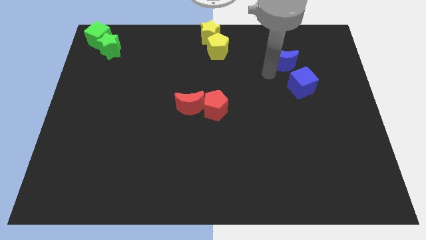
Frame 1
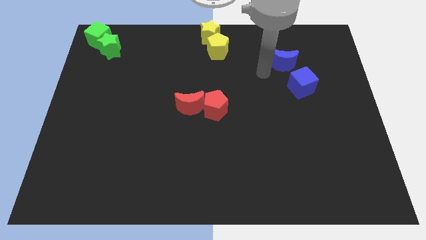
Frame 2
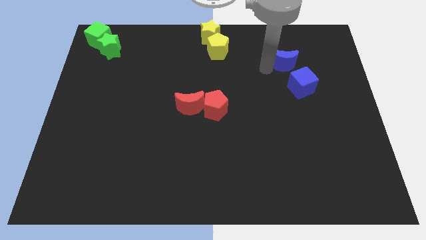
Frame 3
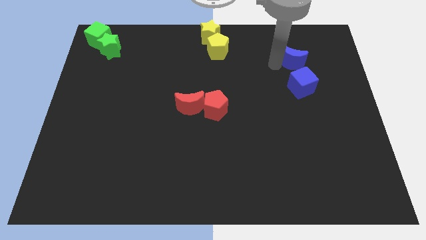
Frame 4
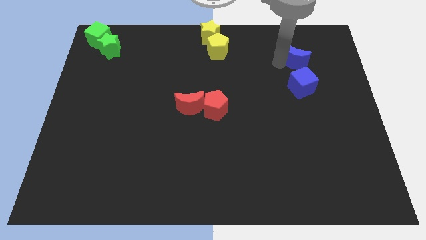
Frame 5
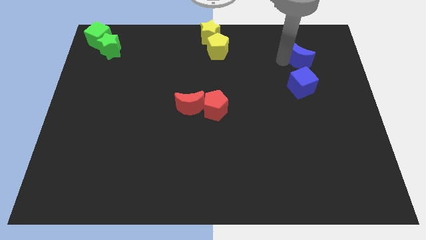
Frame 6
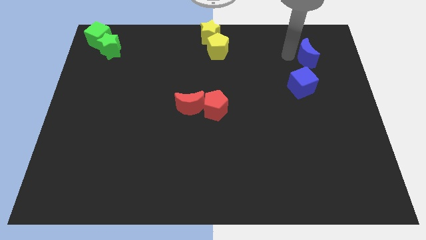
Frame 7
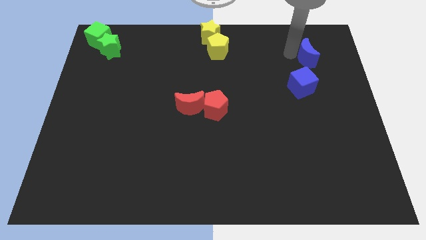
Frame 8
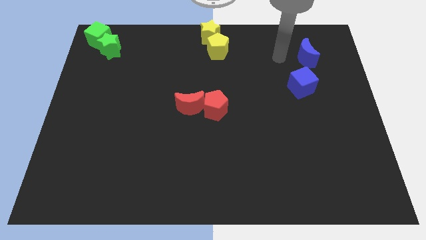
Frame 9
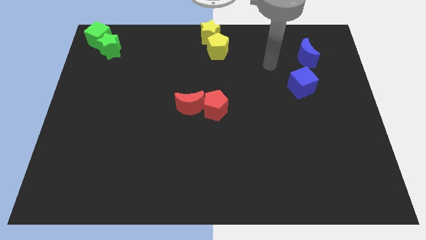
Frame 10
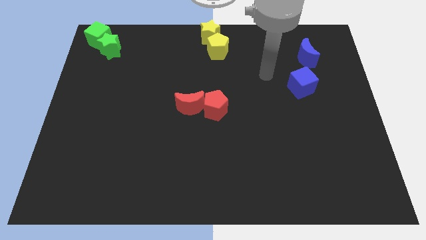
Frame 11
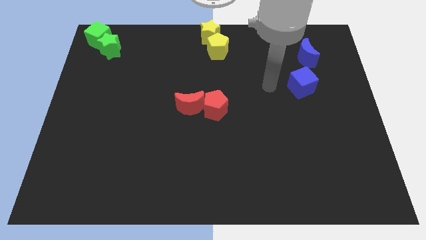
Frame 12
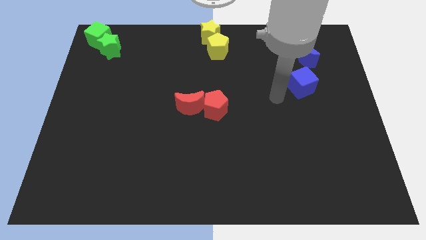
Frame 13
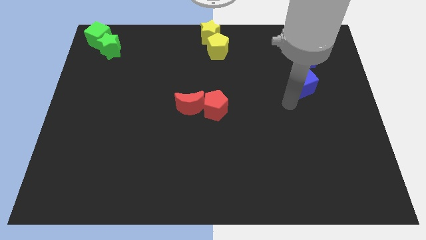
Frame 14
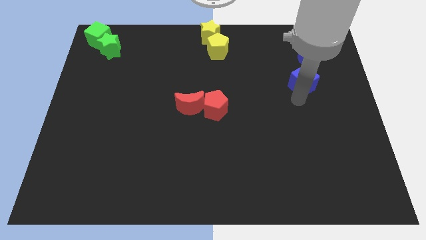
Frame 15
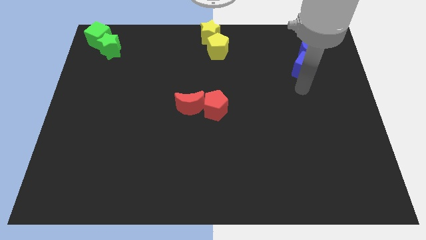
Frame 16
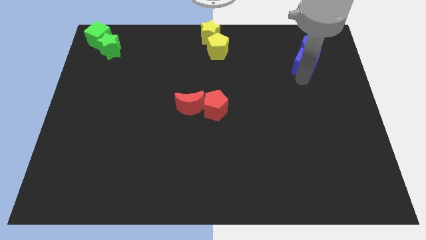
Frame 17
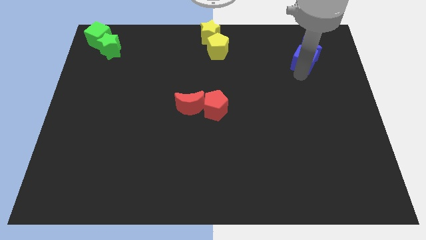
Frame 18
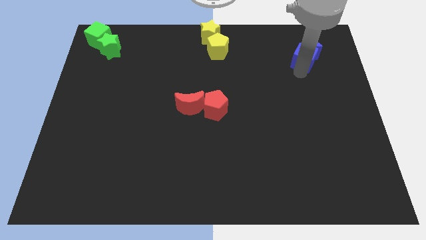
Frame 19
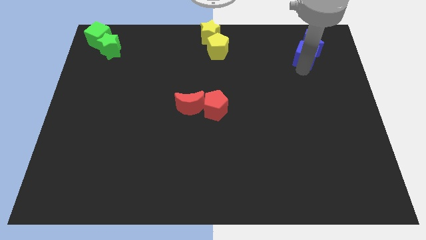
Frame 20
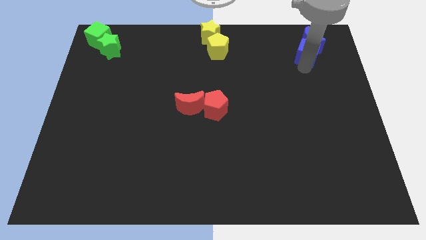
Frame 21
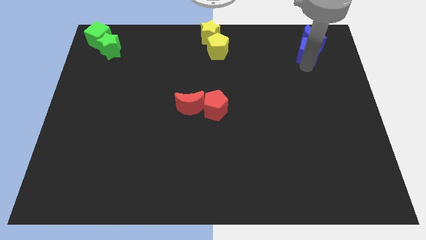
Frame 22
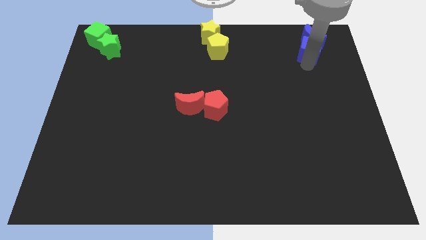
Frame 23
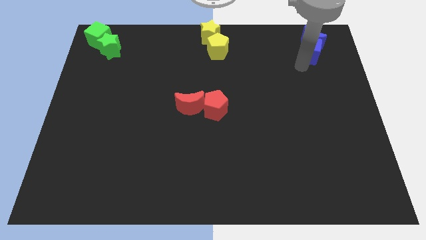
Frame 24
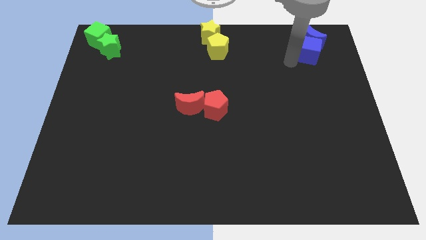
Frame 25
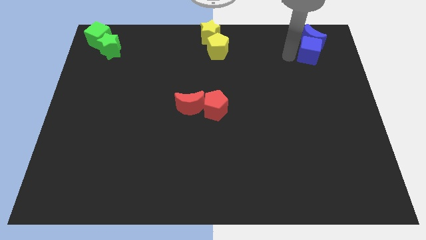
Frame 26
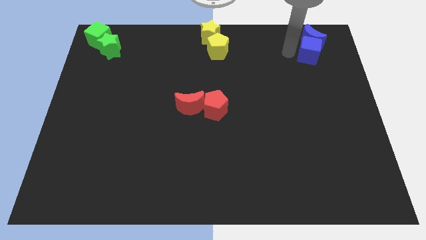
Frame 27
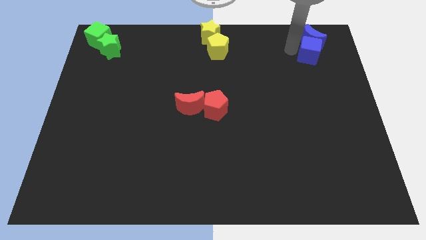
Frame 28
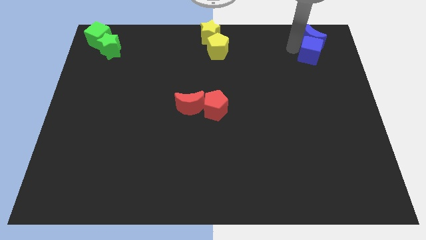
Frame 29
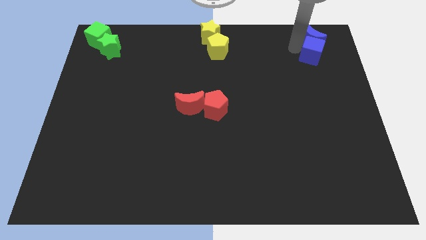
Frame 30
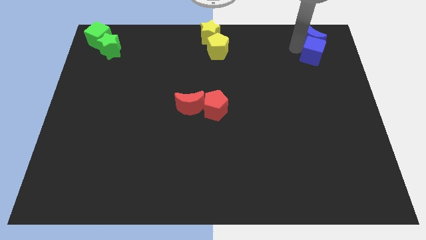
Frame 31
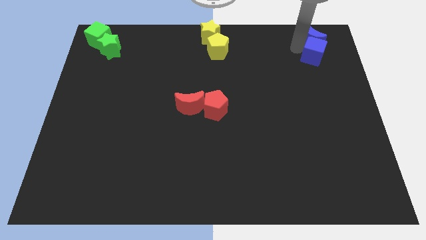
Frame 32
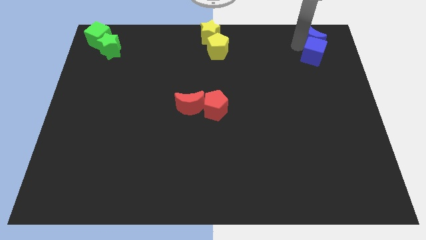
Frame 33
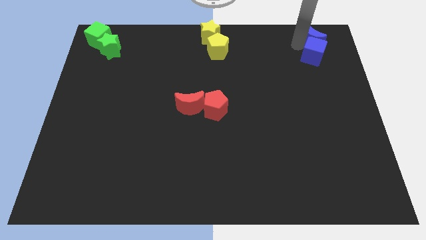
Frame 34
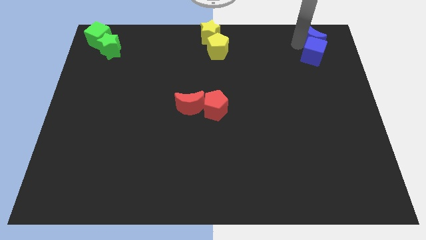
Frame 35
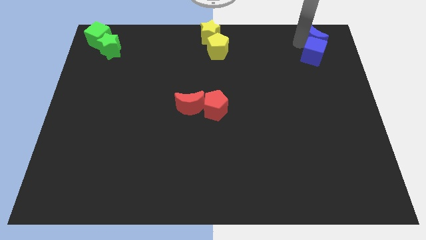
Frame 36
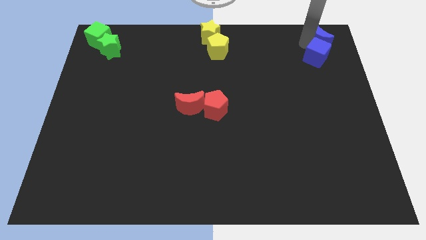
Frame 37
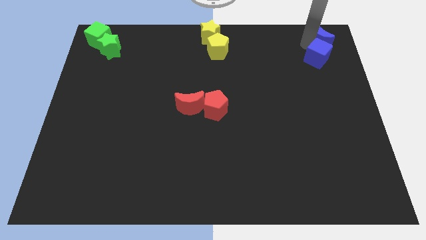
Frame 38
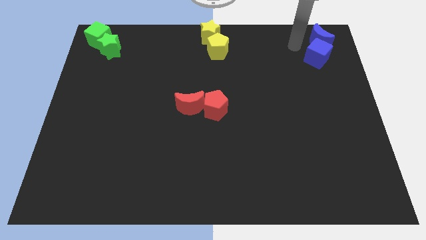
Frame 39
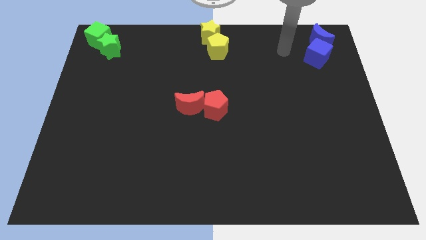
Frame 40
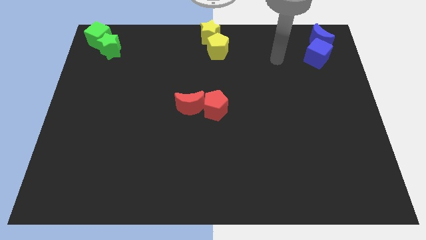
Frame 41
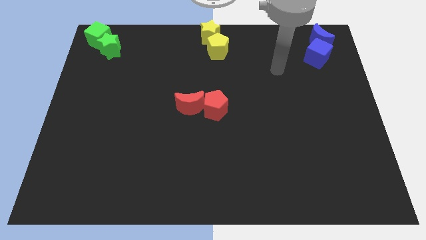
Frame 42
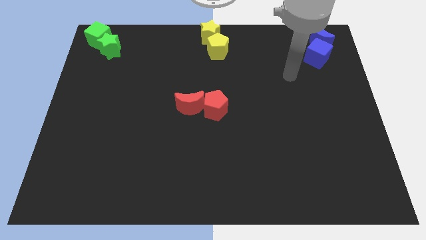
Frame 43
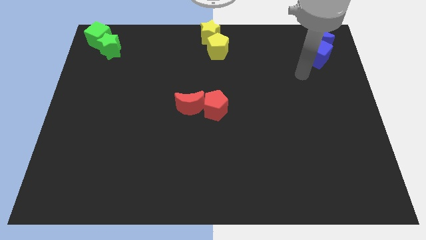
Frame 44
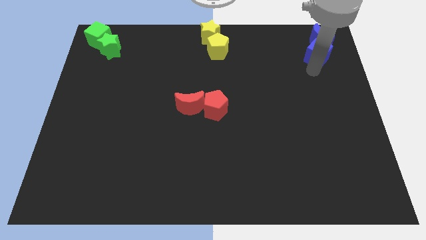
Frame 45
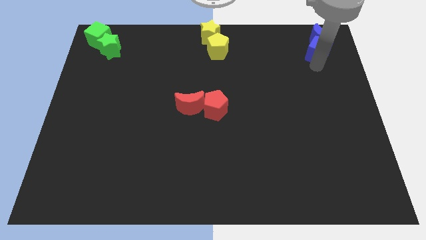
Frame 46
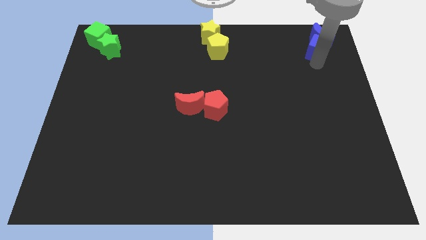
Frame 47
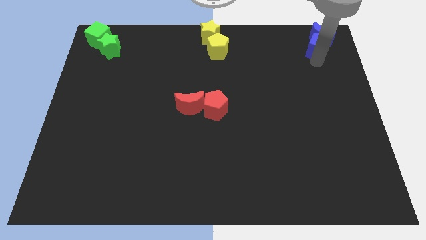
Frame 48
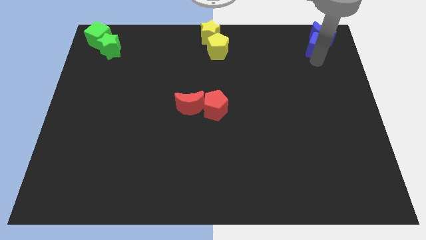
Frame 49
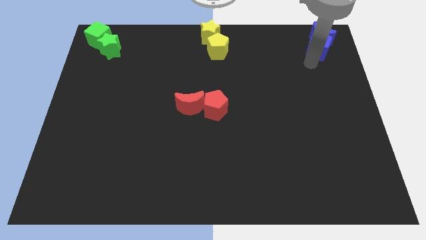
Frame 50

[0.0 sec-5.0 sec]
group up the blue block at the top right corner

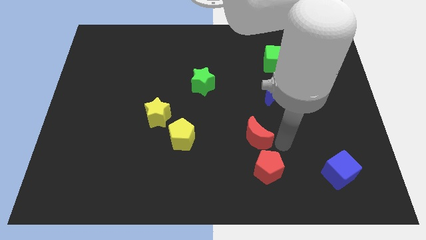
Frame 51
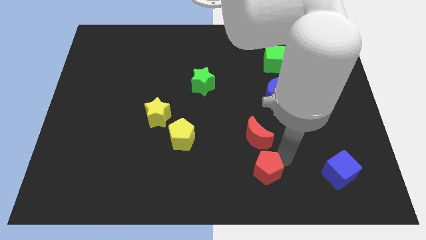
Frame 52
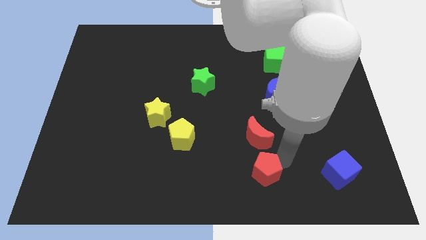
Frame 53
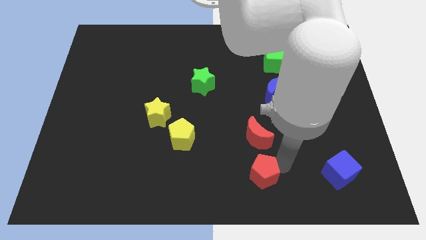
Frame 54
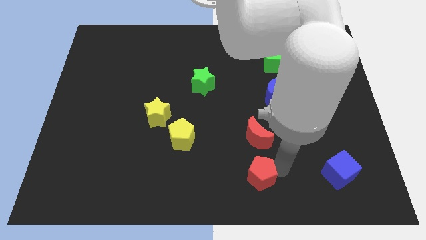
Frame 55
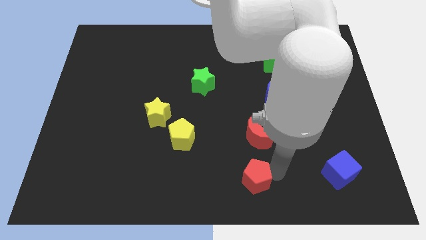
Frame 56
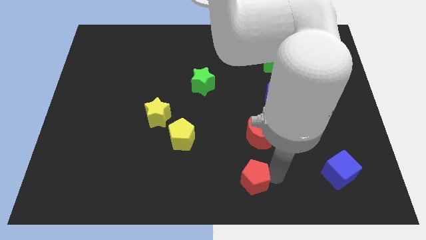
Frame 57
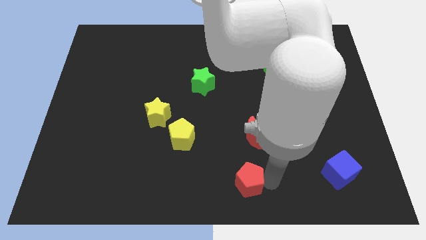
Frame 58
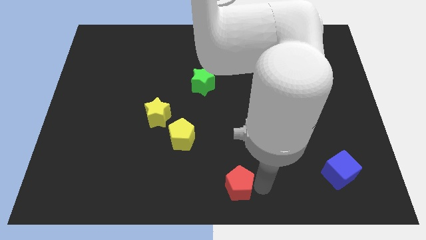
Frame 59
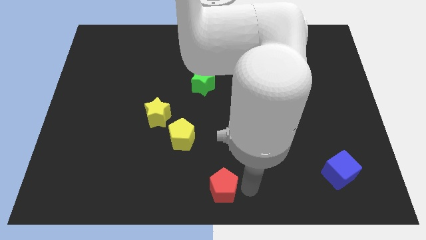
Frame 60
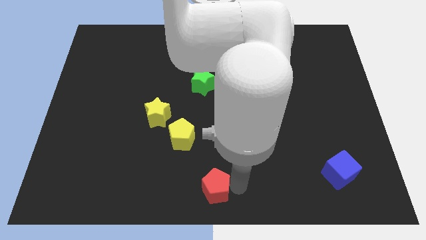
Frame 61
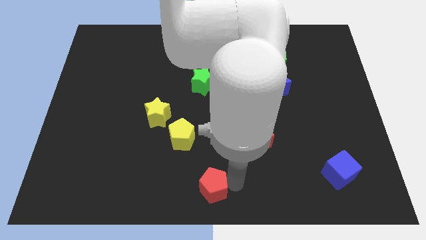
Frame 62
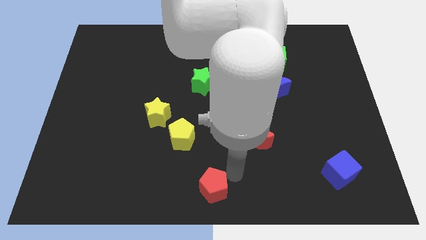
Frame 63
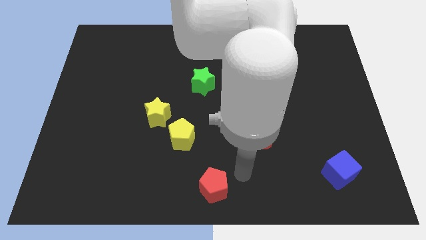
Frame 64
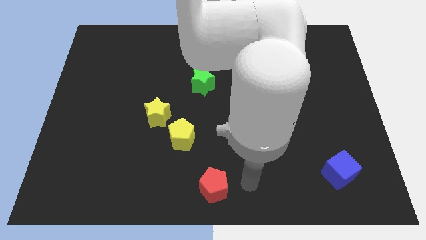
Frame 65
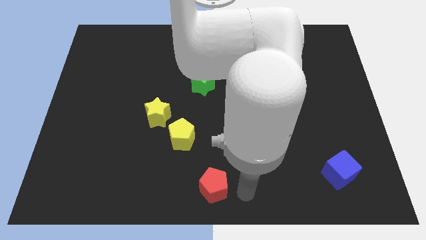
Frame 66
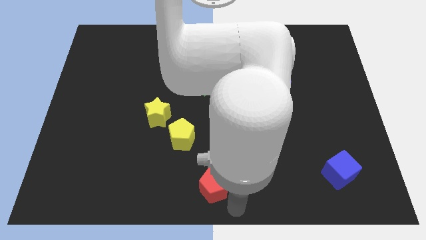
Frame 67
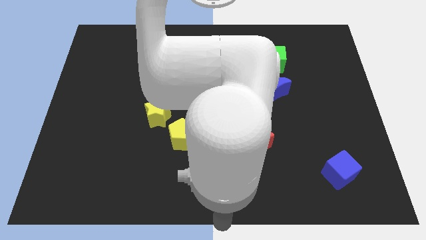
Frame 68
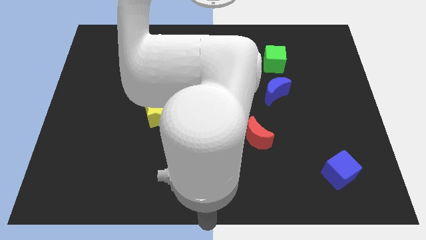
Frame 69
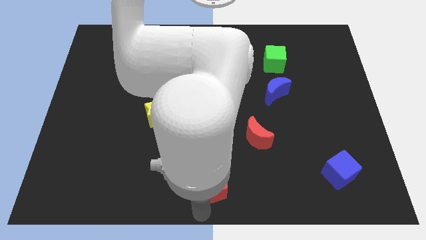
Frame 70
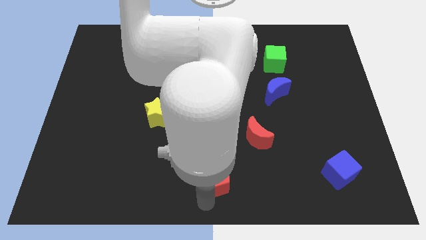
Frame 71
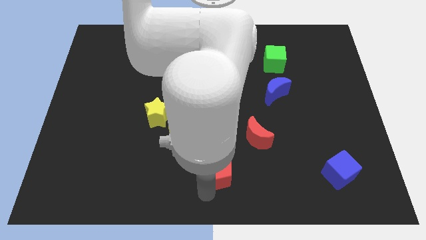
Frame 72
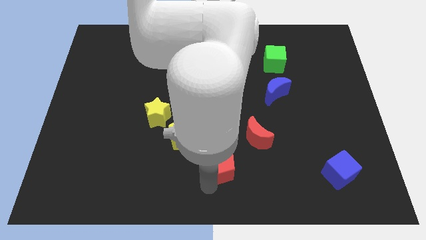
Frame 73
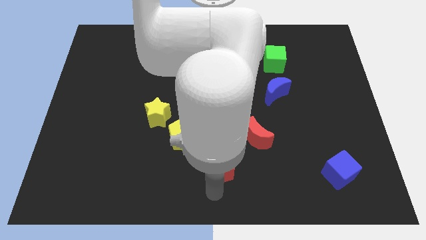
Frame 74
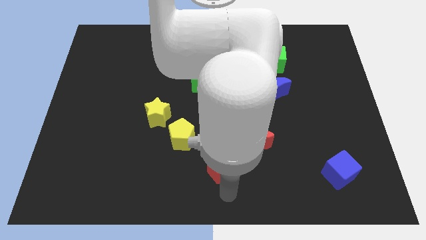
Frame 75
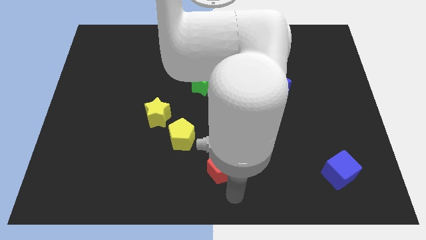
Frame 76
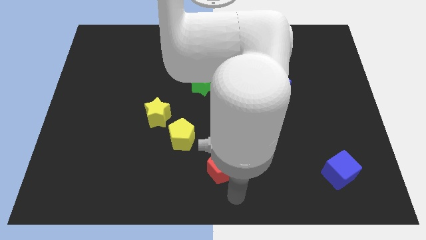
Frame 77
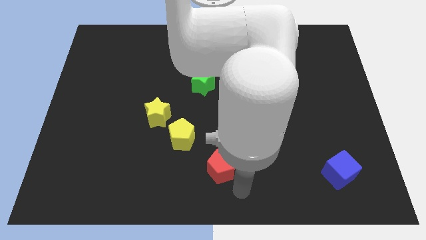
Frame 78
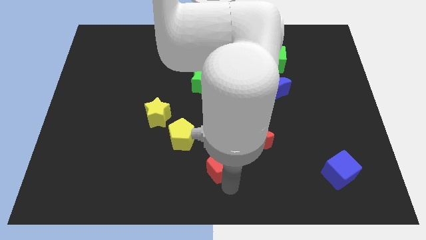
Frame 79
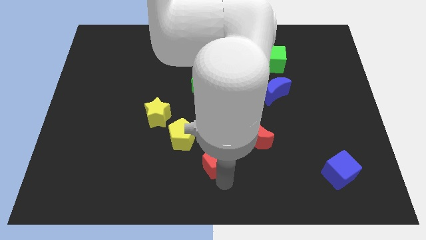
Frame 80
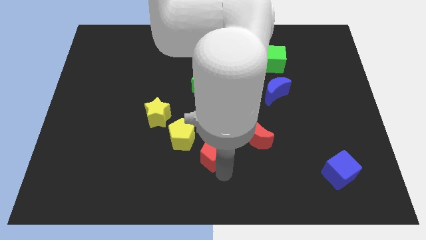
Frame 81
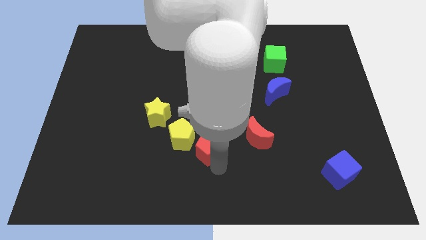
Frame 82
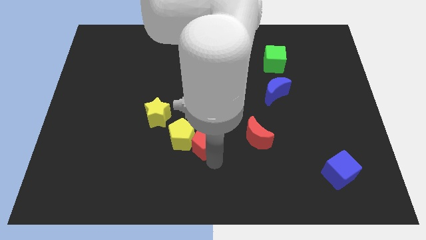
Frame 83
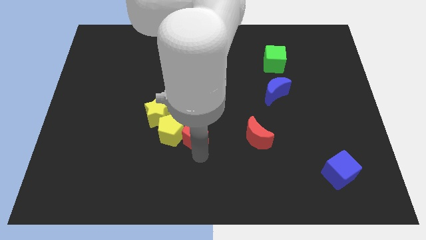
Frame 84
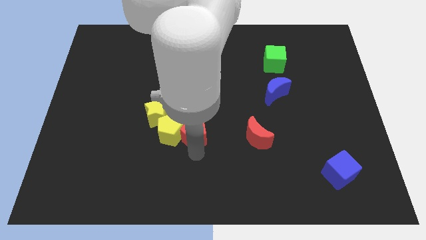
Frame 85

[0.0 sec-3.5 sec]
move the red pentagon to the right of the yellow pentagon

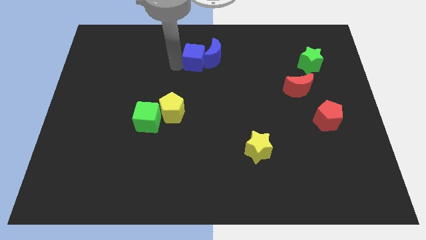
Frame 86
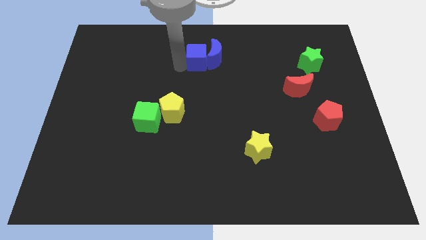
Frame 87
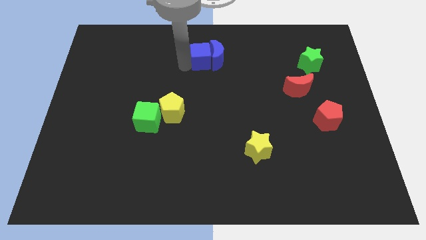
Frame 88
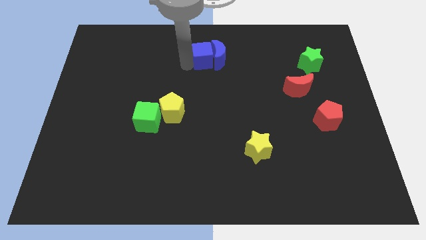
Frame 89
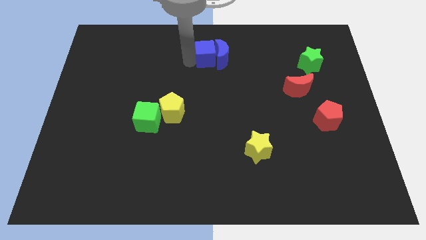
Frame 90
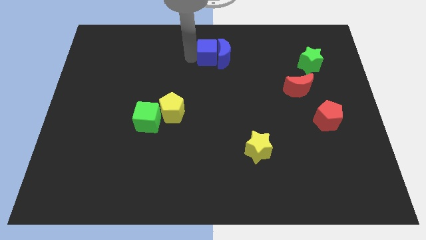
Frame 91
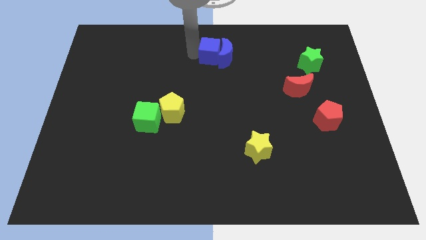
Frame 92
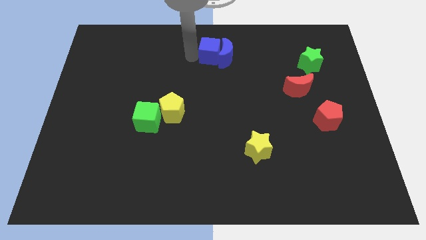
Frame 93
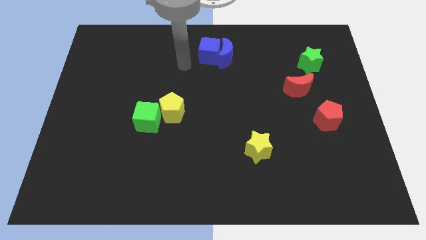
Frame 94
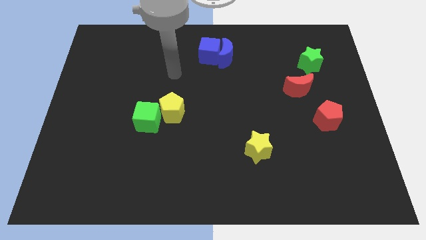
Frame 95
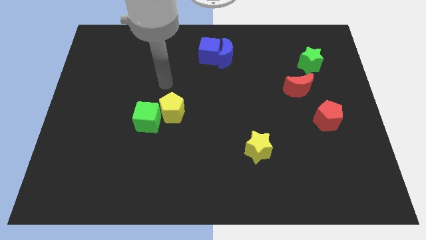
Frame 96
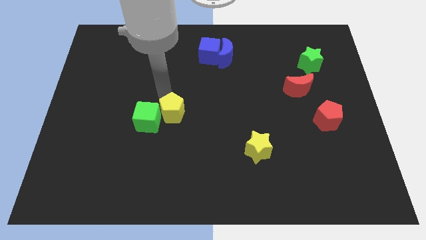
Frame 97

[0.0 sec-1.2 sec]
push the blue cube into the blue crescent from the left
